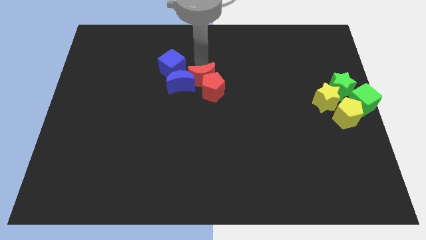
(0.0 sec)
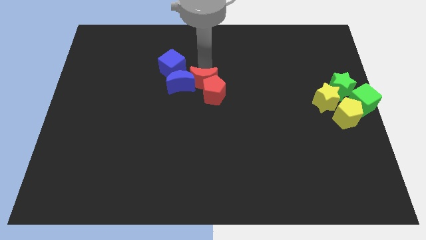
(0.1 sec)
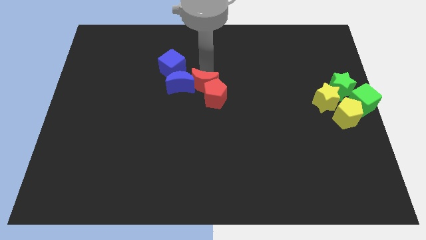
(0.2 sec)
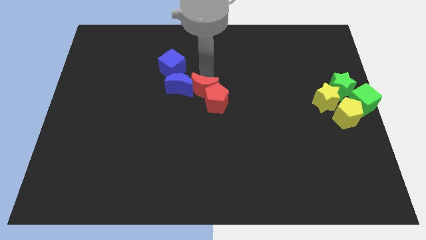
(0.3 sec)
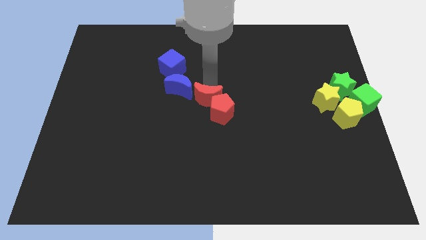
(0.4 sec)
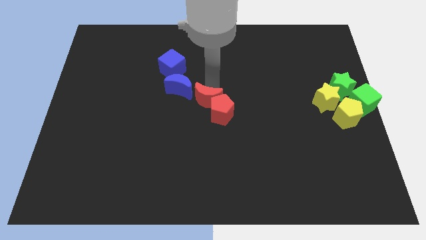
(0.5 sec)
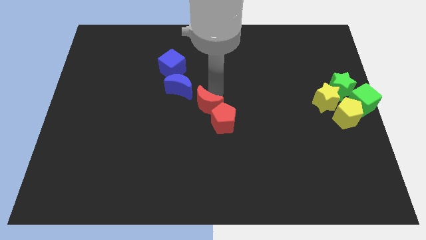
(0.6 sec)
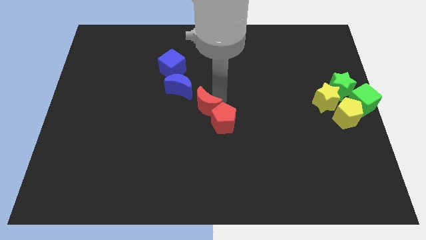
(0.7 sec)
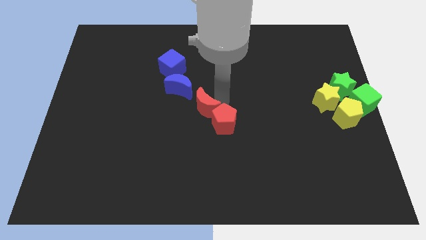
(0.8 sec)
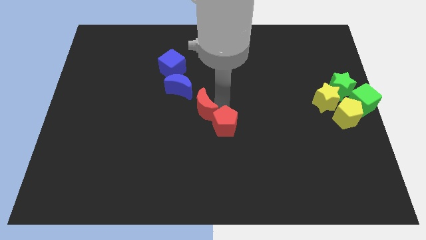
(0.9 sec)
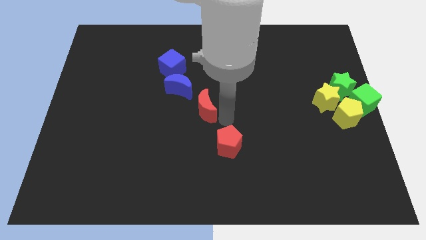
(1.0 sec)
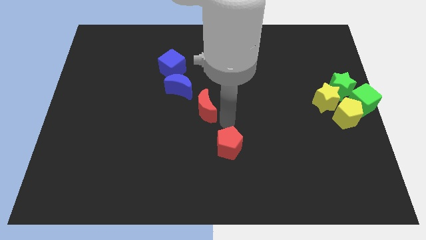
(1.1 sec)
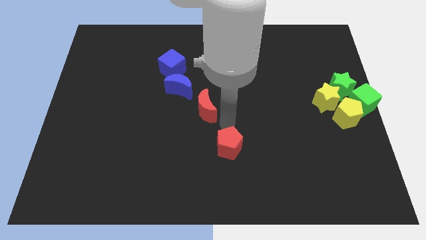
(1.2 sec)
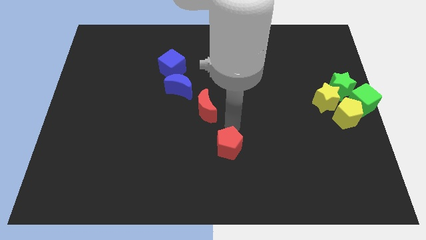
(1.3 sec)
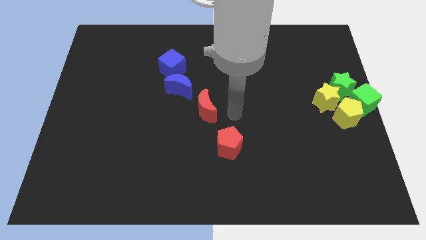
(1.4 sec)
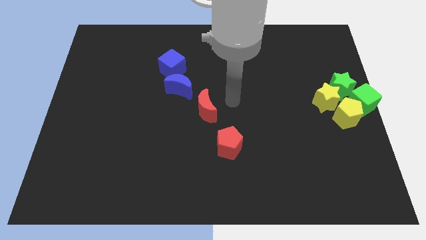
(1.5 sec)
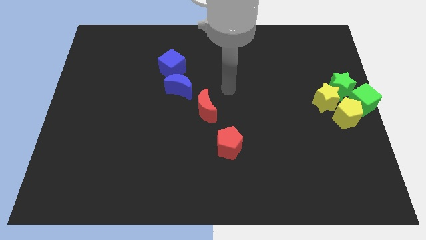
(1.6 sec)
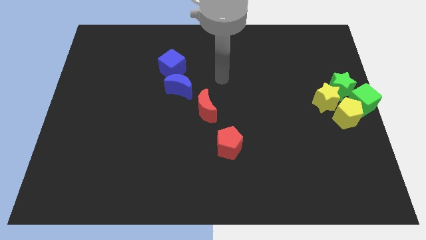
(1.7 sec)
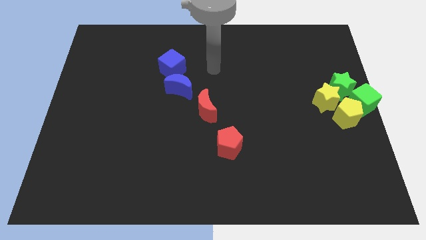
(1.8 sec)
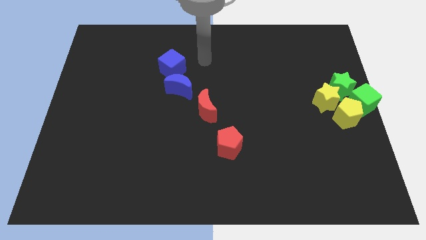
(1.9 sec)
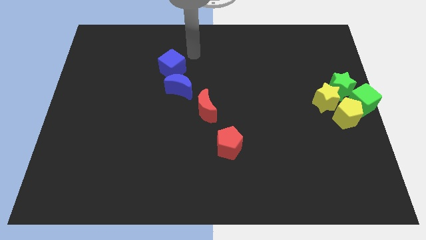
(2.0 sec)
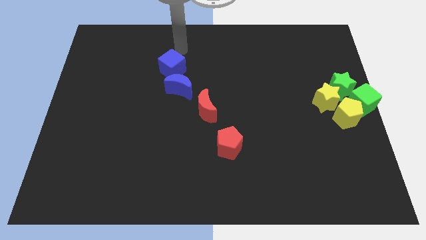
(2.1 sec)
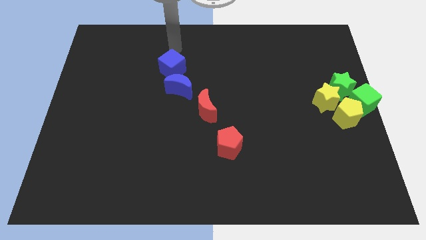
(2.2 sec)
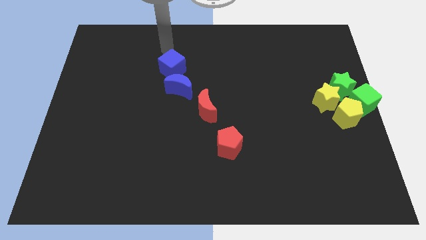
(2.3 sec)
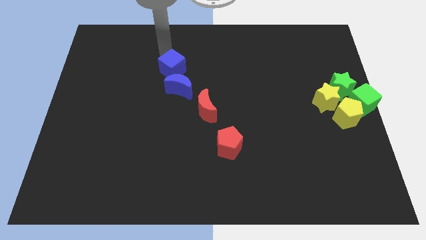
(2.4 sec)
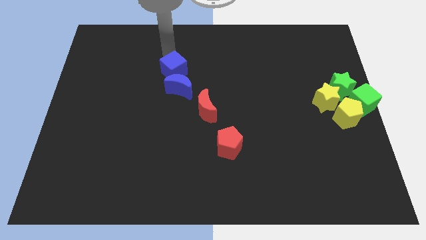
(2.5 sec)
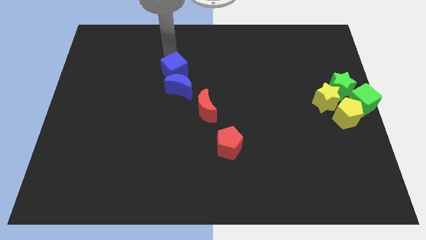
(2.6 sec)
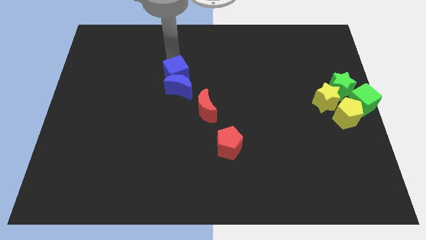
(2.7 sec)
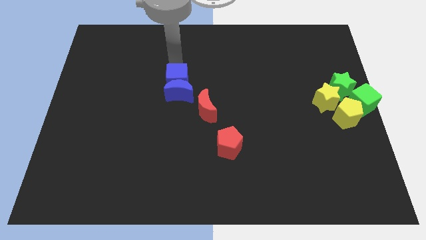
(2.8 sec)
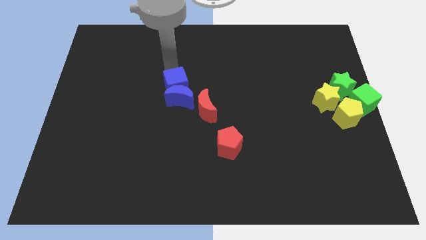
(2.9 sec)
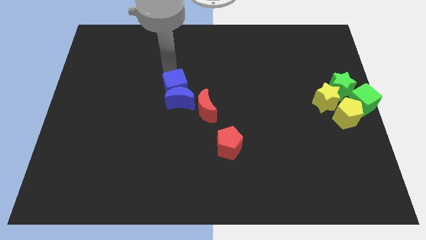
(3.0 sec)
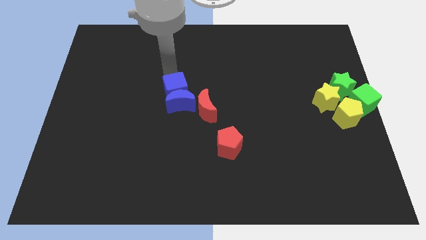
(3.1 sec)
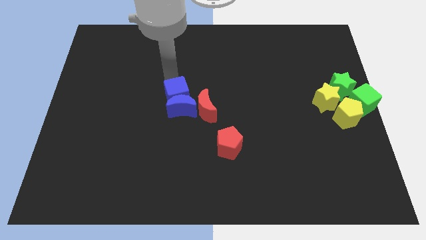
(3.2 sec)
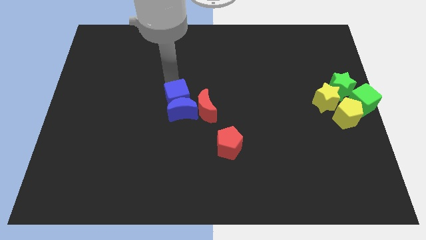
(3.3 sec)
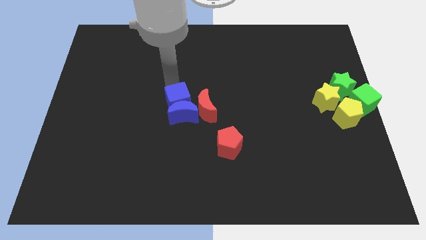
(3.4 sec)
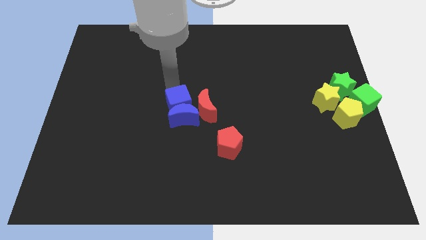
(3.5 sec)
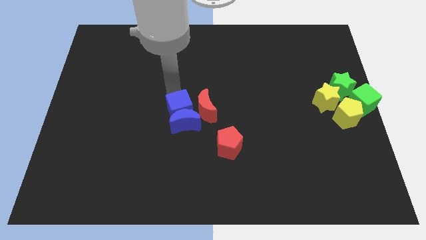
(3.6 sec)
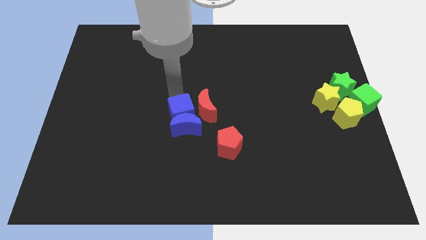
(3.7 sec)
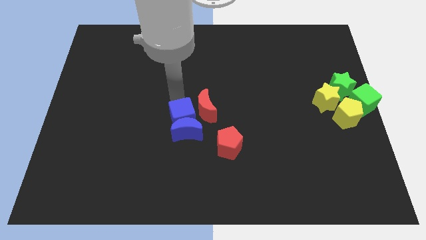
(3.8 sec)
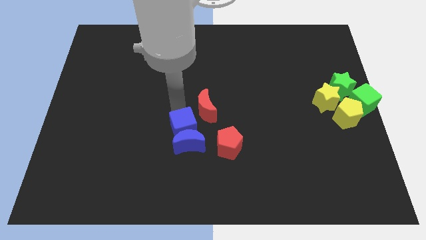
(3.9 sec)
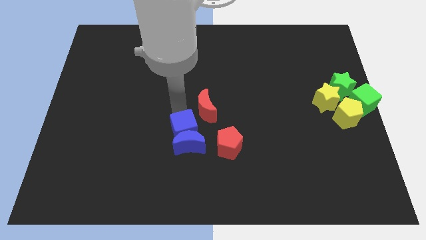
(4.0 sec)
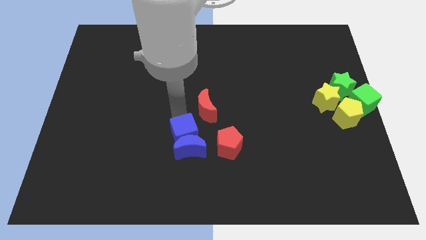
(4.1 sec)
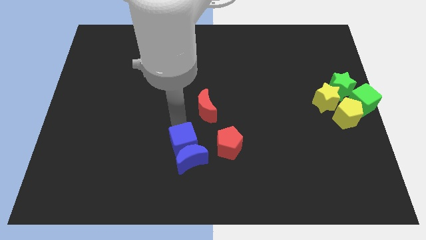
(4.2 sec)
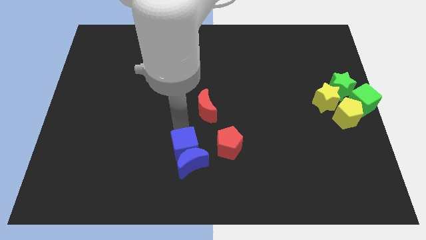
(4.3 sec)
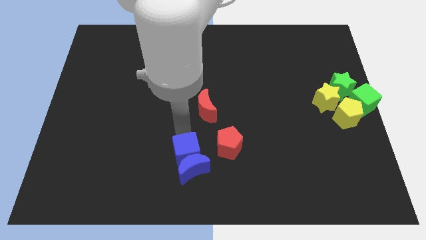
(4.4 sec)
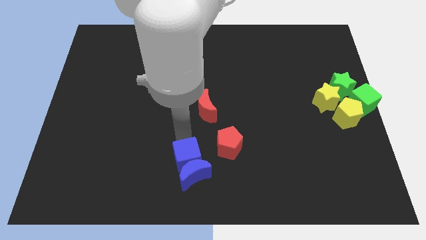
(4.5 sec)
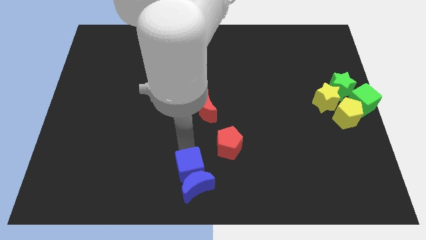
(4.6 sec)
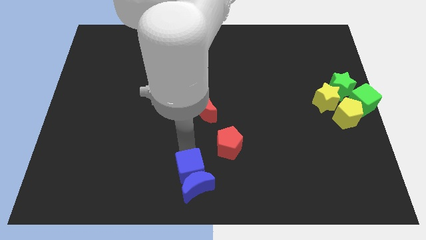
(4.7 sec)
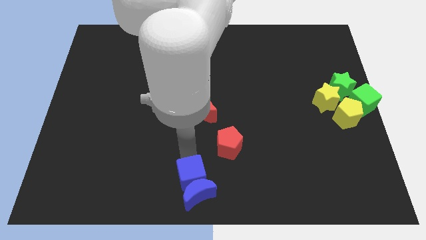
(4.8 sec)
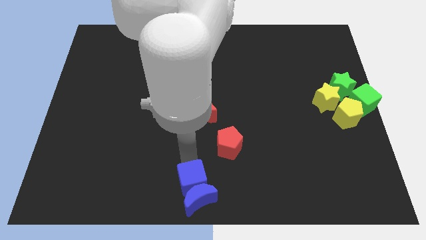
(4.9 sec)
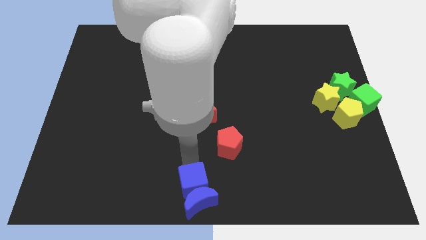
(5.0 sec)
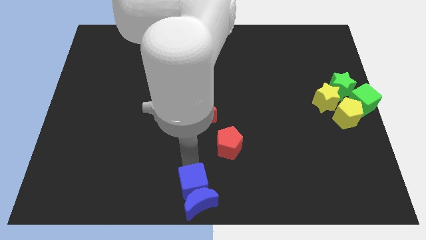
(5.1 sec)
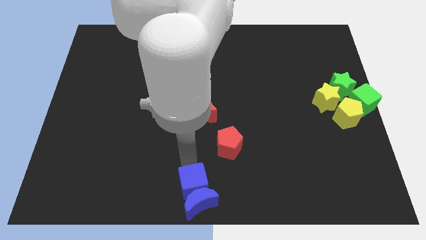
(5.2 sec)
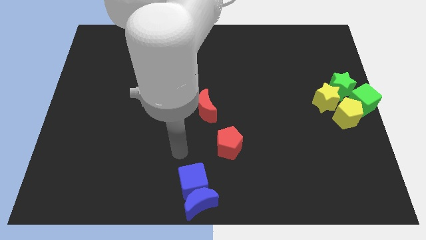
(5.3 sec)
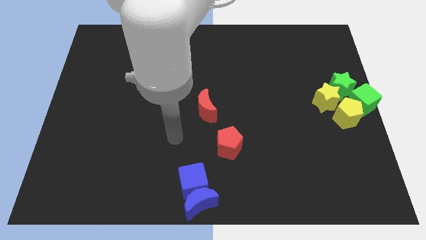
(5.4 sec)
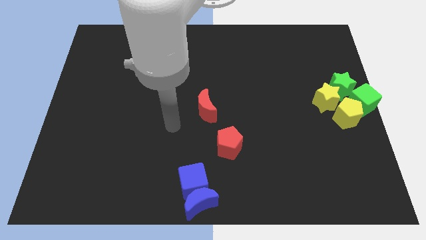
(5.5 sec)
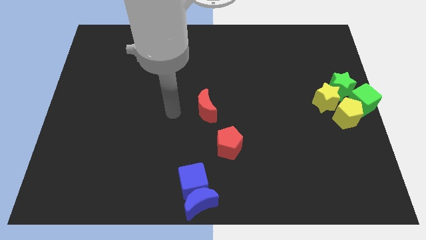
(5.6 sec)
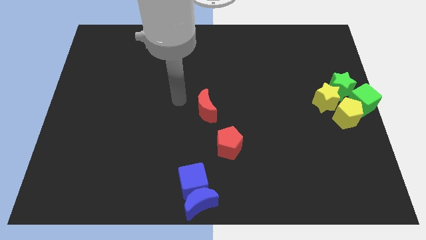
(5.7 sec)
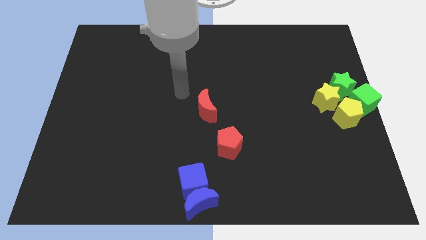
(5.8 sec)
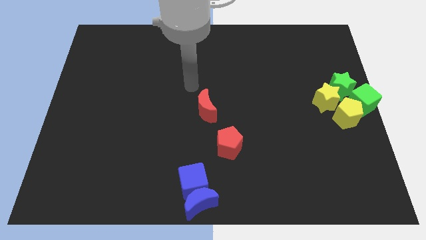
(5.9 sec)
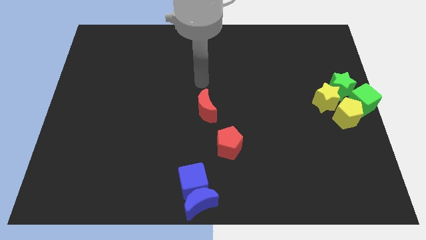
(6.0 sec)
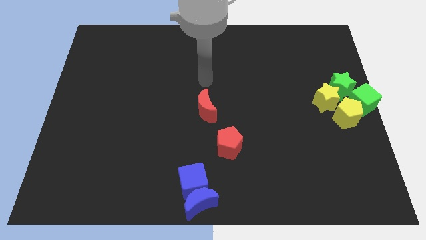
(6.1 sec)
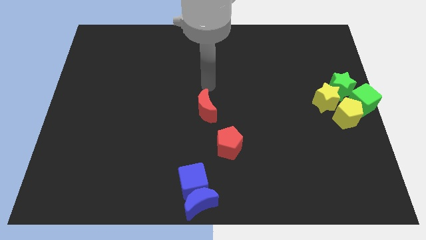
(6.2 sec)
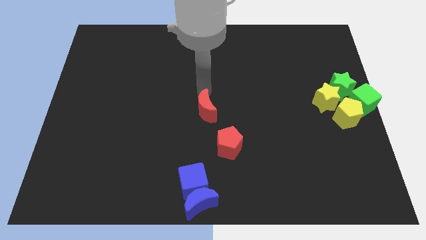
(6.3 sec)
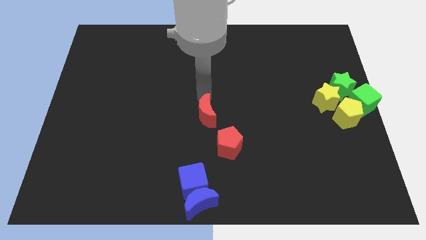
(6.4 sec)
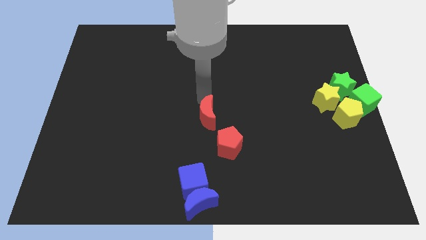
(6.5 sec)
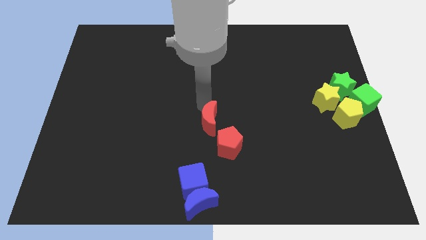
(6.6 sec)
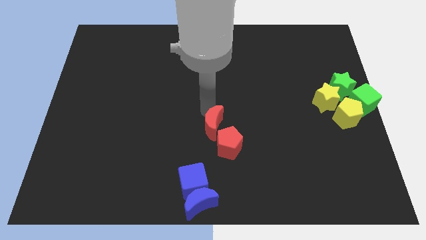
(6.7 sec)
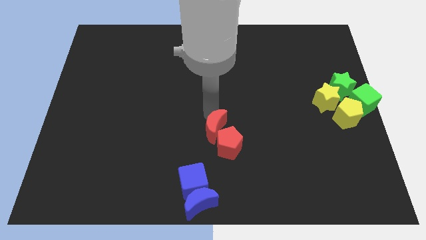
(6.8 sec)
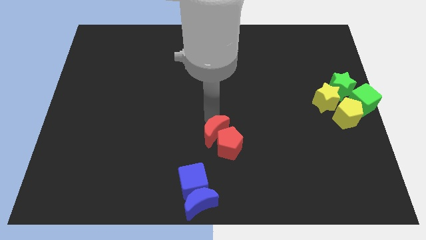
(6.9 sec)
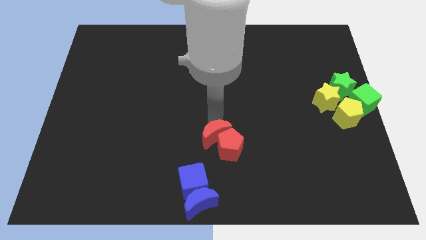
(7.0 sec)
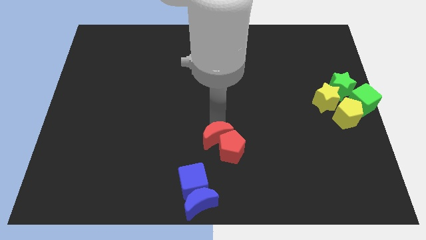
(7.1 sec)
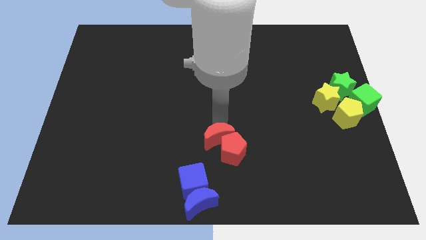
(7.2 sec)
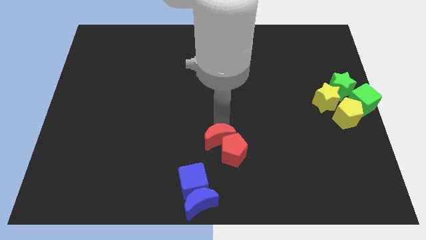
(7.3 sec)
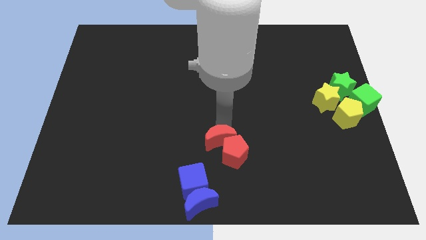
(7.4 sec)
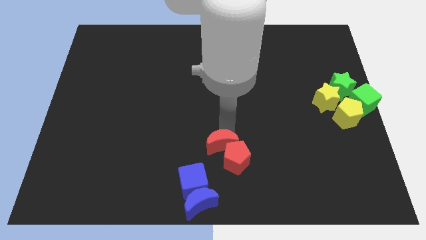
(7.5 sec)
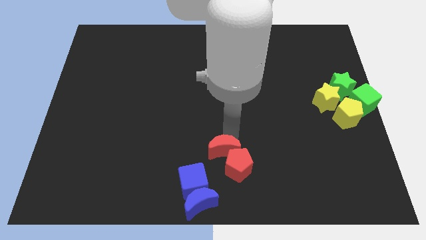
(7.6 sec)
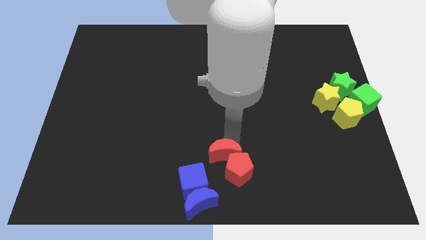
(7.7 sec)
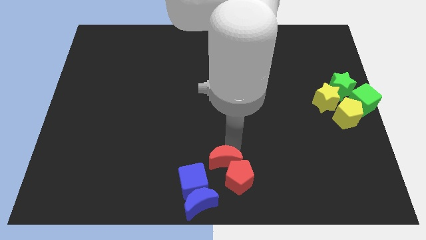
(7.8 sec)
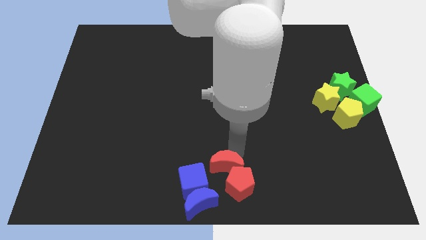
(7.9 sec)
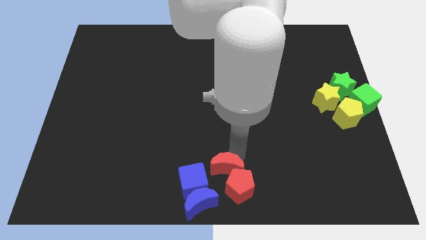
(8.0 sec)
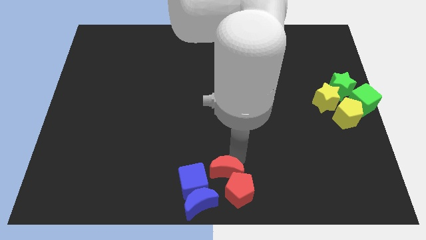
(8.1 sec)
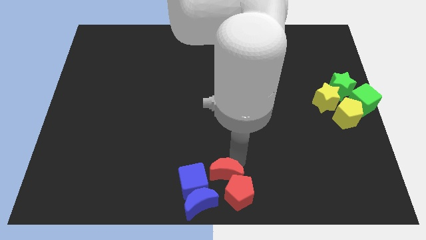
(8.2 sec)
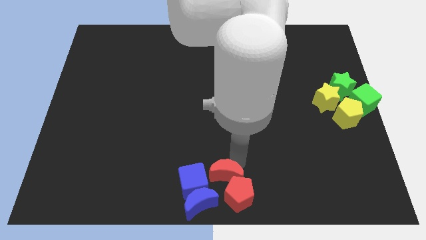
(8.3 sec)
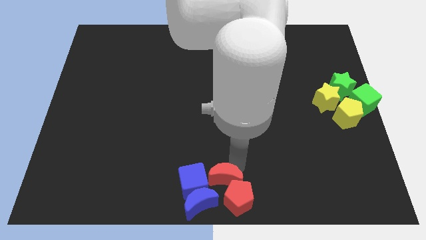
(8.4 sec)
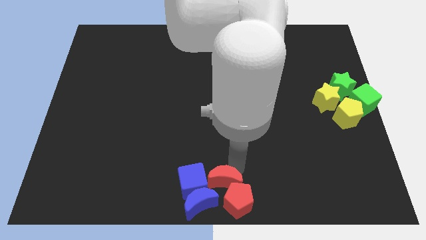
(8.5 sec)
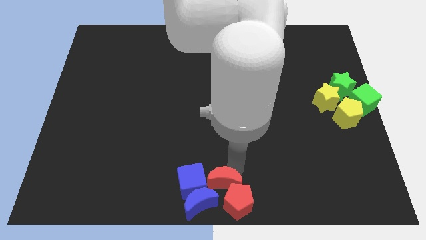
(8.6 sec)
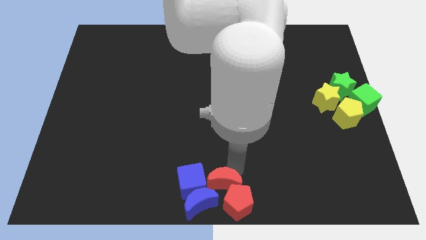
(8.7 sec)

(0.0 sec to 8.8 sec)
move the group of blocks at the bottom center of the table
